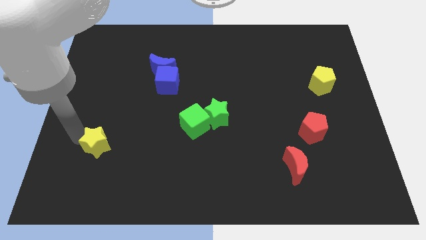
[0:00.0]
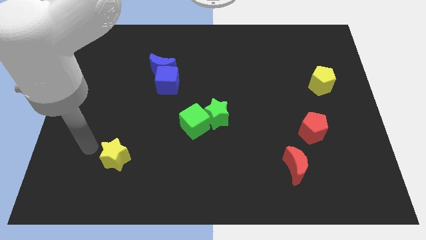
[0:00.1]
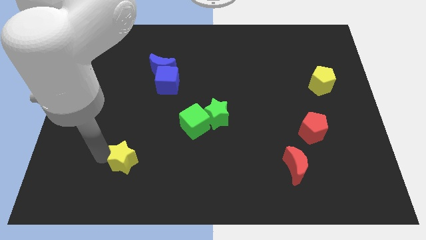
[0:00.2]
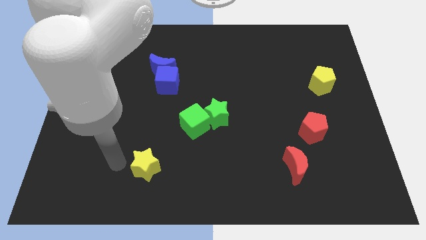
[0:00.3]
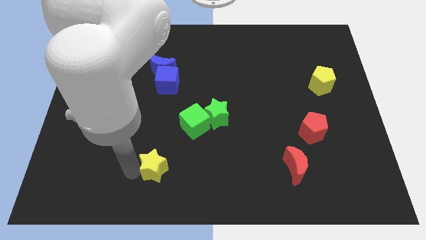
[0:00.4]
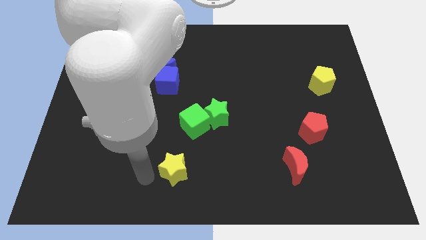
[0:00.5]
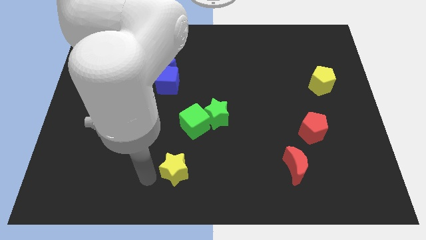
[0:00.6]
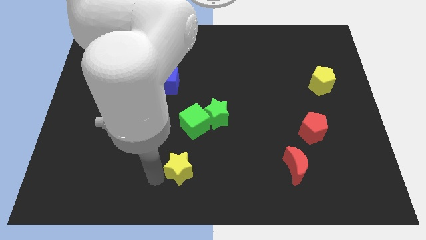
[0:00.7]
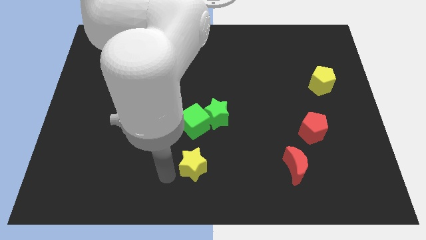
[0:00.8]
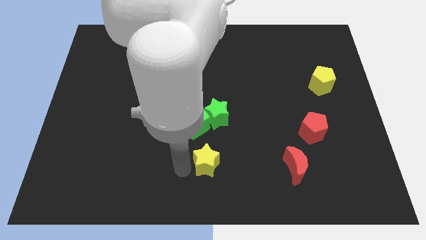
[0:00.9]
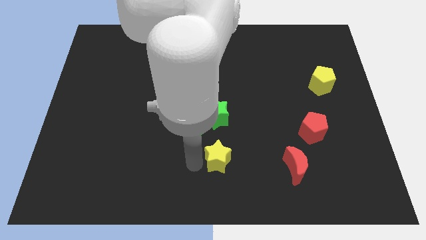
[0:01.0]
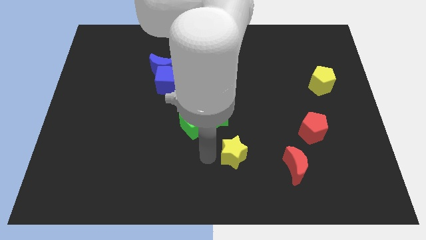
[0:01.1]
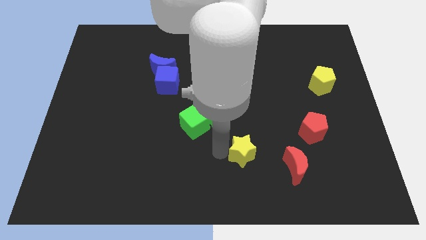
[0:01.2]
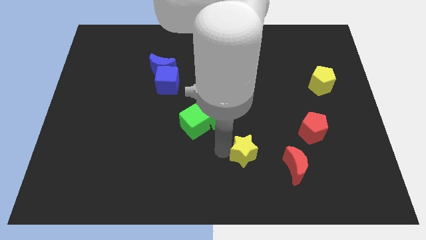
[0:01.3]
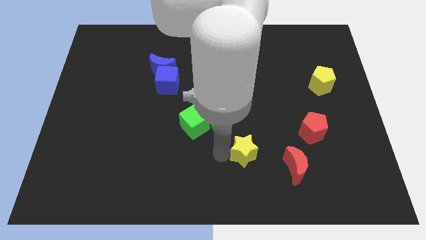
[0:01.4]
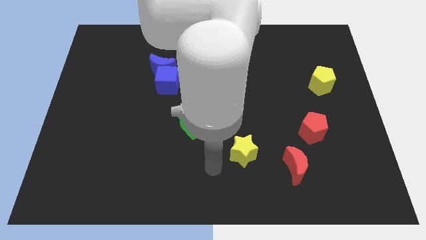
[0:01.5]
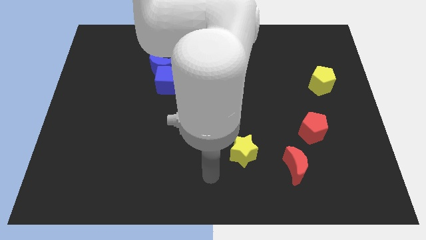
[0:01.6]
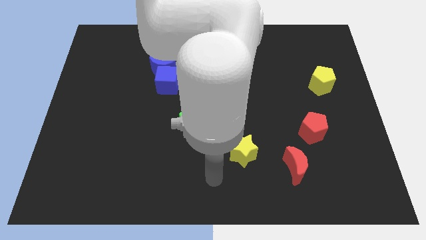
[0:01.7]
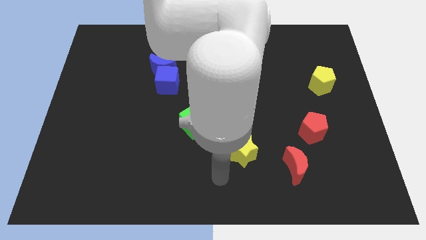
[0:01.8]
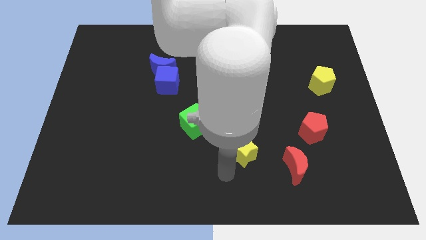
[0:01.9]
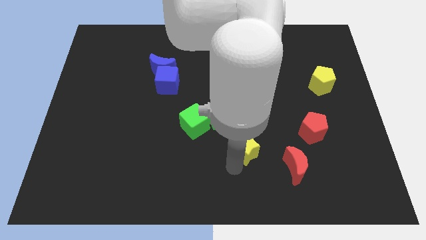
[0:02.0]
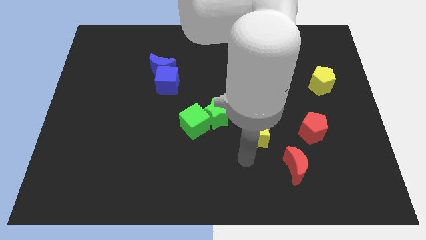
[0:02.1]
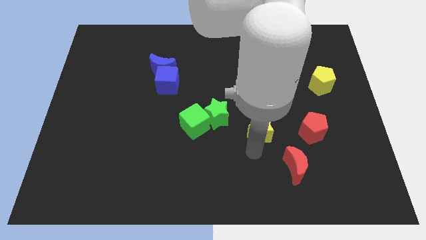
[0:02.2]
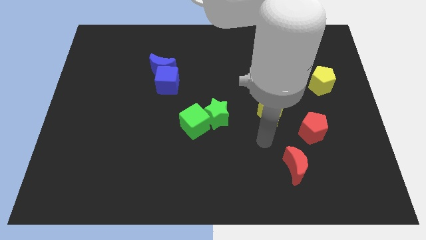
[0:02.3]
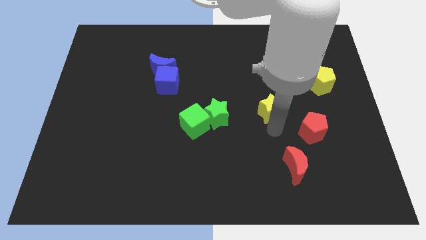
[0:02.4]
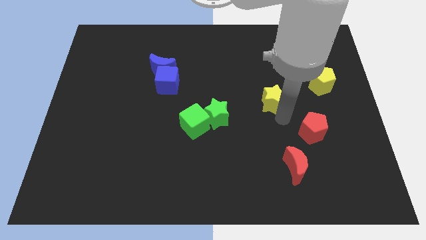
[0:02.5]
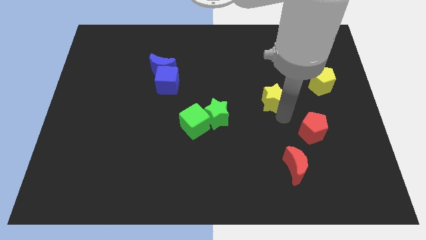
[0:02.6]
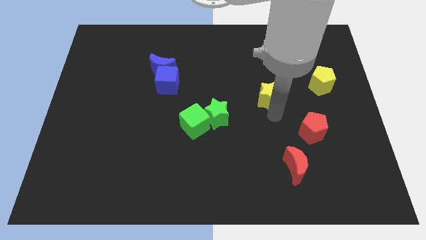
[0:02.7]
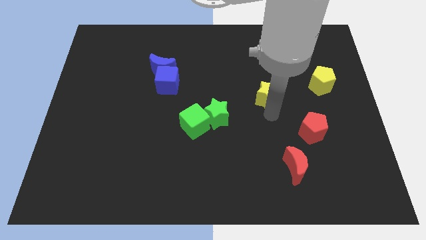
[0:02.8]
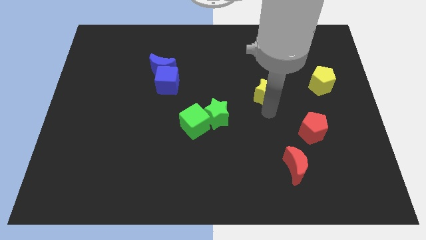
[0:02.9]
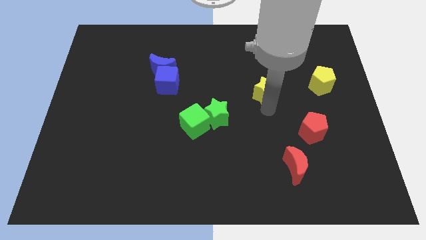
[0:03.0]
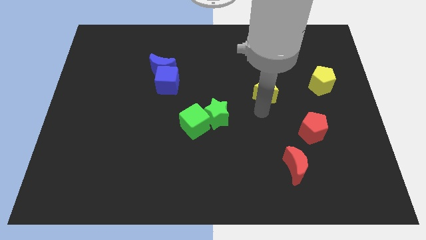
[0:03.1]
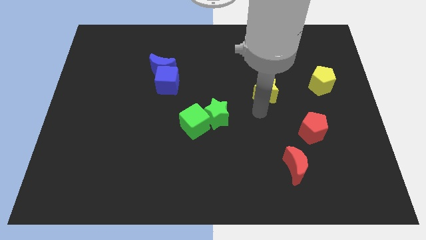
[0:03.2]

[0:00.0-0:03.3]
place the yellow star diagonally top right to the green star

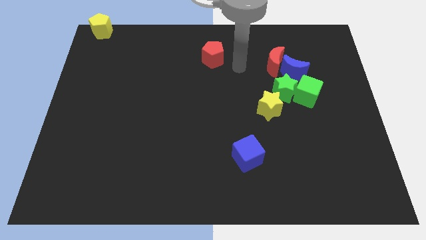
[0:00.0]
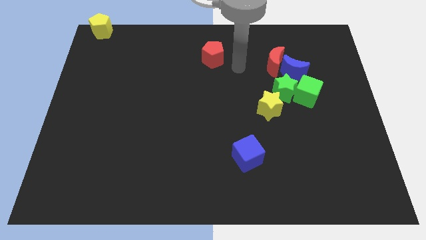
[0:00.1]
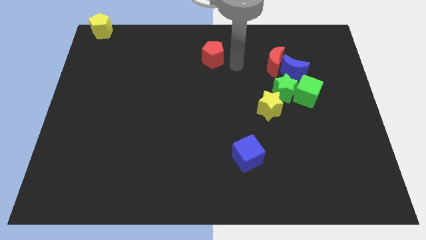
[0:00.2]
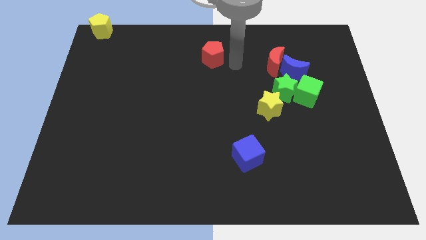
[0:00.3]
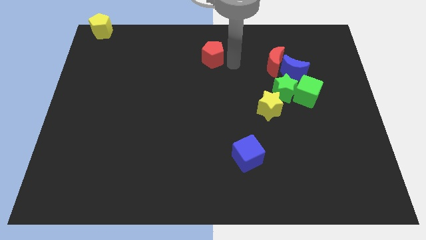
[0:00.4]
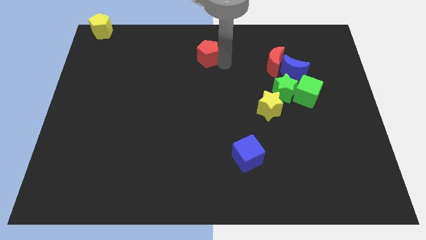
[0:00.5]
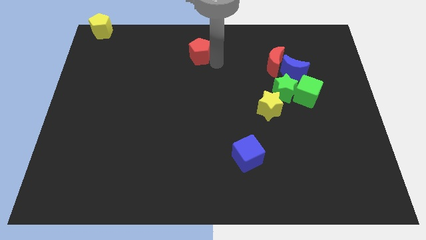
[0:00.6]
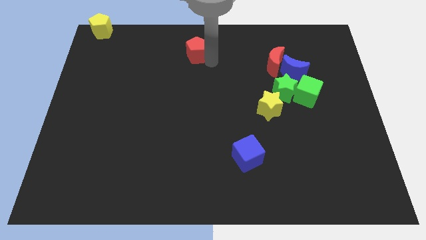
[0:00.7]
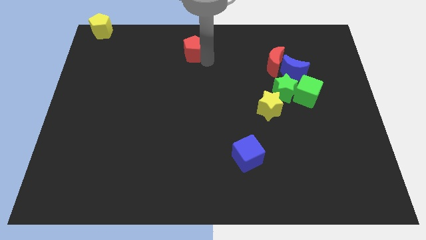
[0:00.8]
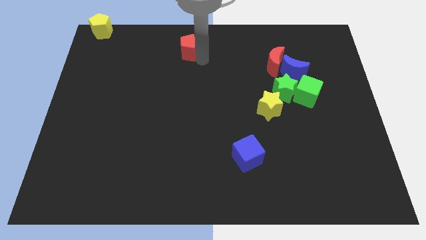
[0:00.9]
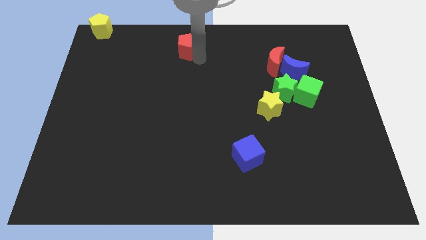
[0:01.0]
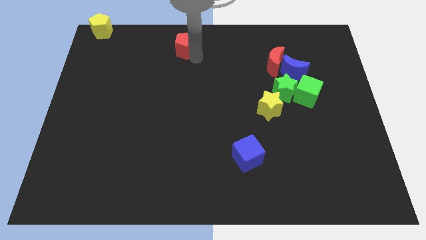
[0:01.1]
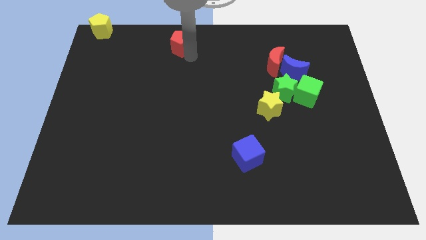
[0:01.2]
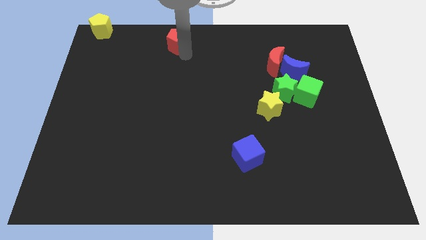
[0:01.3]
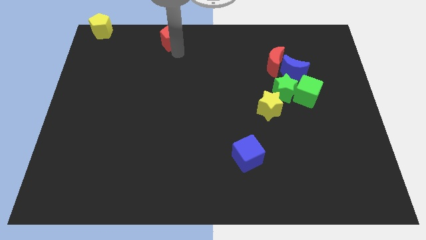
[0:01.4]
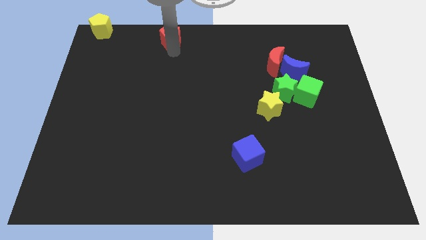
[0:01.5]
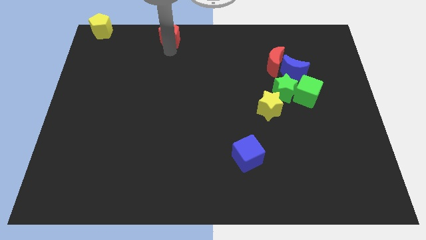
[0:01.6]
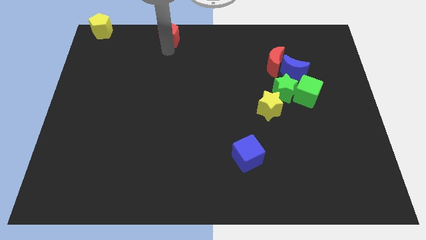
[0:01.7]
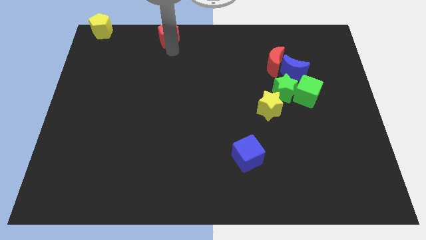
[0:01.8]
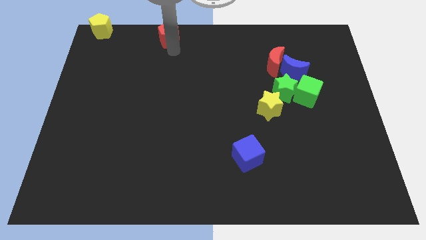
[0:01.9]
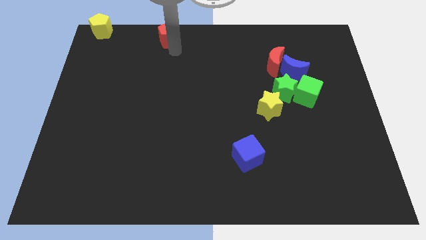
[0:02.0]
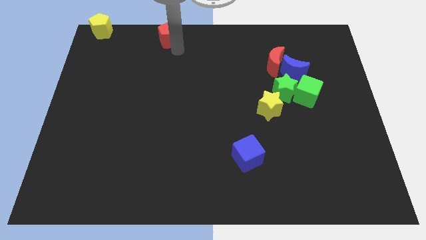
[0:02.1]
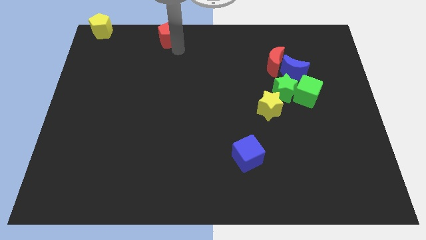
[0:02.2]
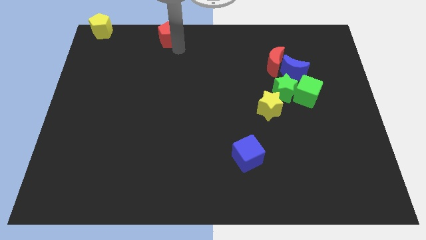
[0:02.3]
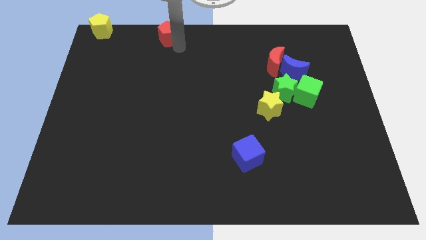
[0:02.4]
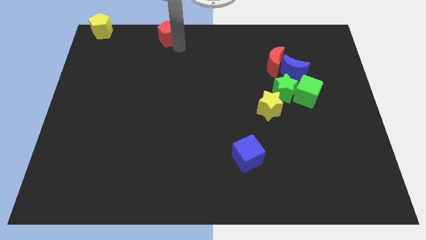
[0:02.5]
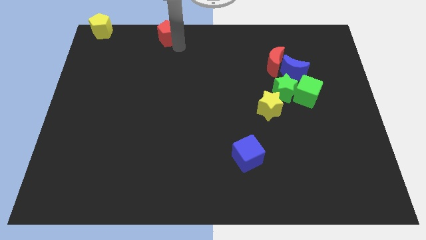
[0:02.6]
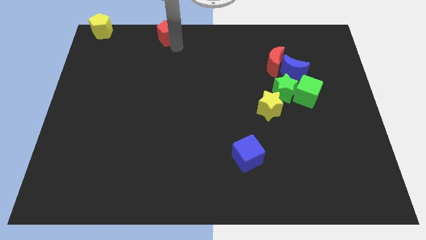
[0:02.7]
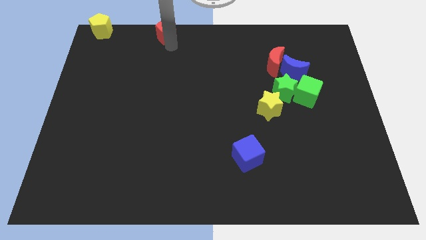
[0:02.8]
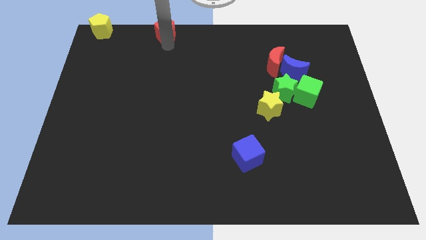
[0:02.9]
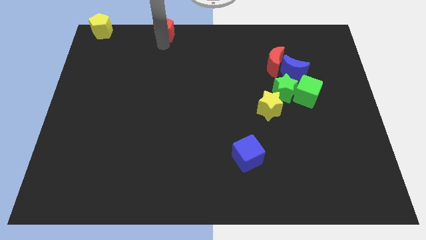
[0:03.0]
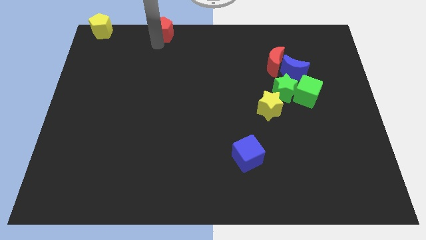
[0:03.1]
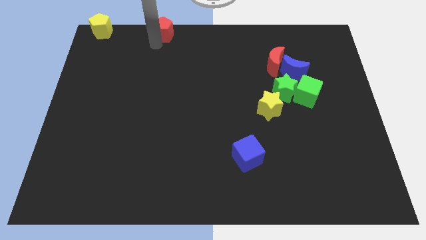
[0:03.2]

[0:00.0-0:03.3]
push the red pentagon to the right of the yellow pentagon

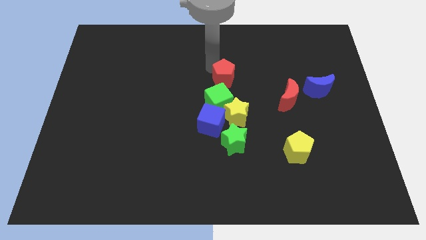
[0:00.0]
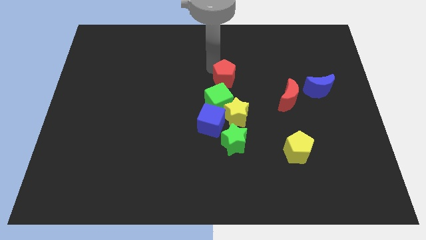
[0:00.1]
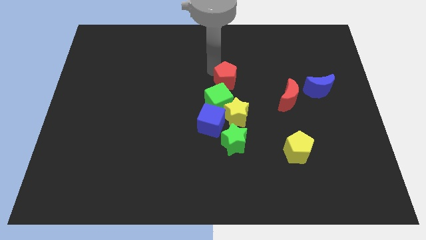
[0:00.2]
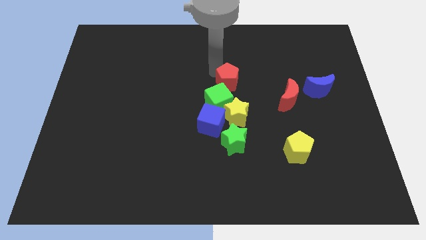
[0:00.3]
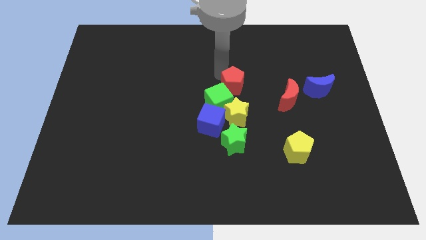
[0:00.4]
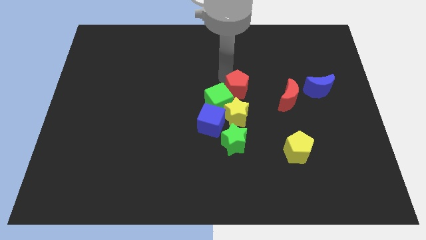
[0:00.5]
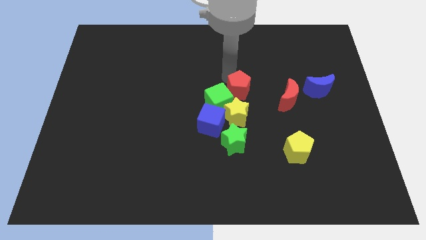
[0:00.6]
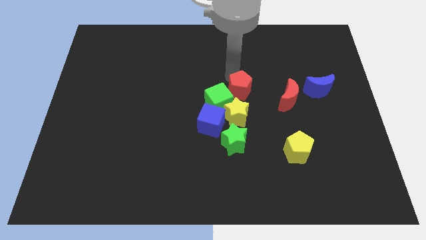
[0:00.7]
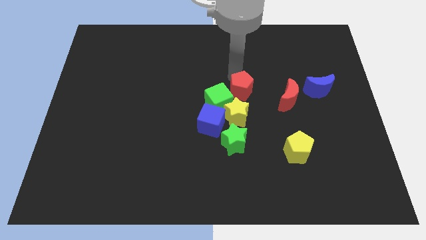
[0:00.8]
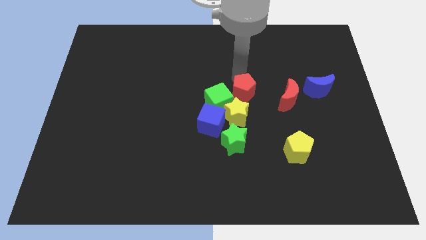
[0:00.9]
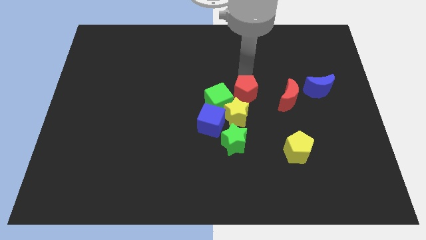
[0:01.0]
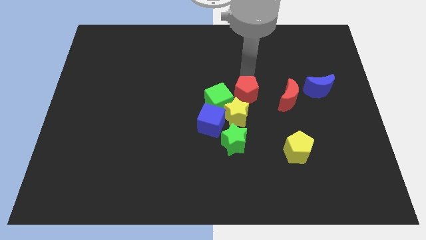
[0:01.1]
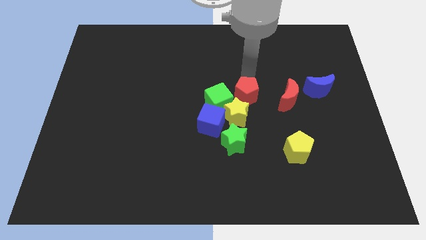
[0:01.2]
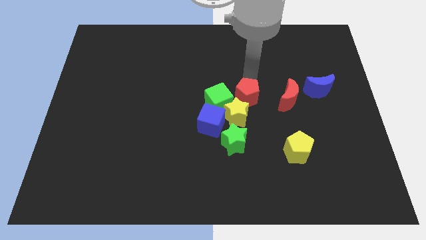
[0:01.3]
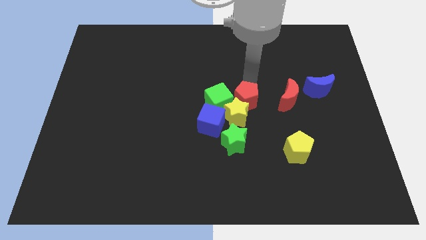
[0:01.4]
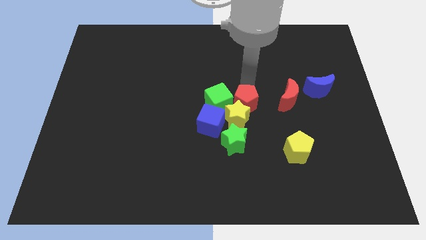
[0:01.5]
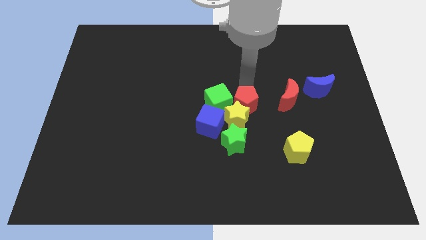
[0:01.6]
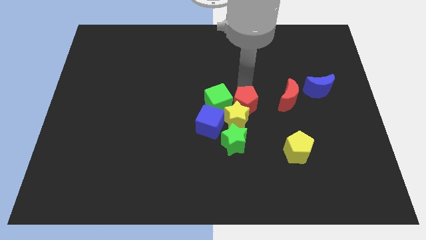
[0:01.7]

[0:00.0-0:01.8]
add red pentagon to the group of blocks at the center of the board

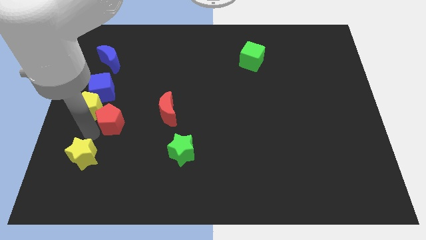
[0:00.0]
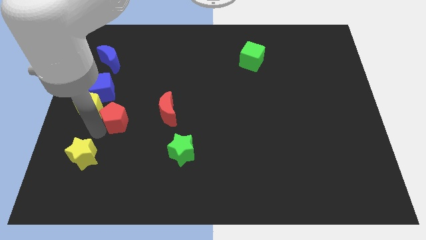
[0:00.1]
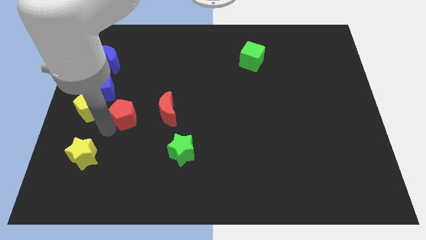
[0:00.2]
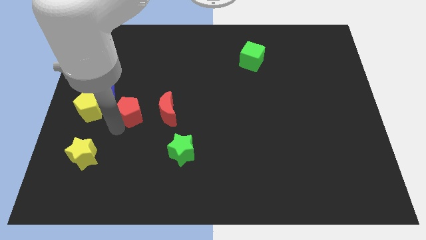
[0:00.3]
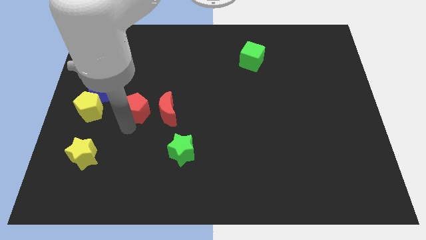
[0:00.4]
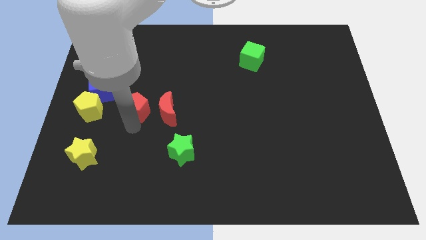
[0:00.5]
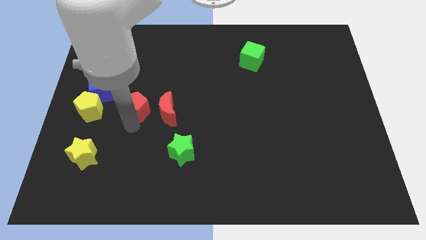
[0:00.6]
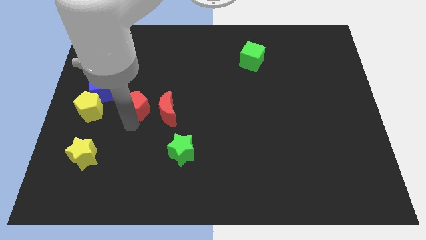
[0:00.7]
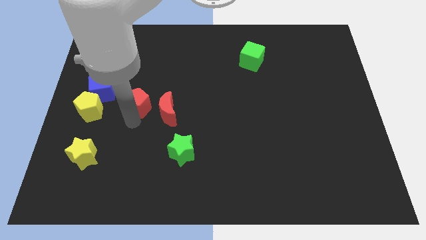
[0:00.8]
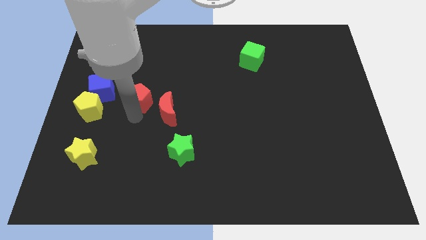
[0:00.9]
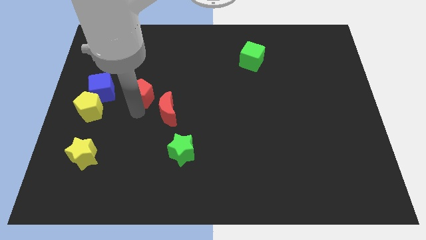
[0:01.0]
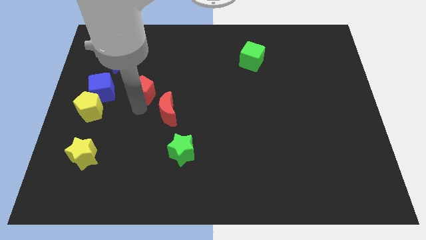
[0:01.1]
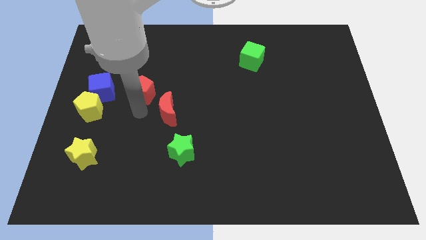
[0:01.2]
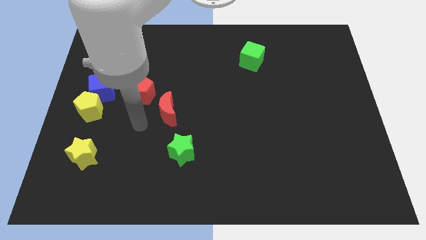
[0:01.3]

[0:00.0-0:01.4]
place the red pentagon diagonally above the yellow star
